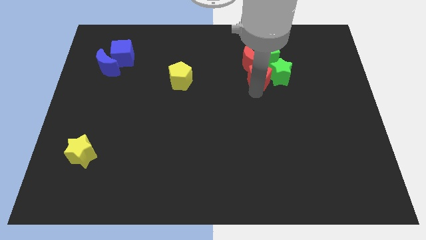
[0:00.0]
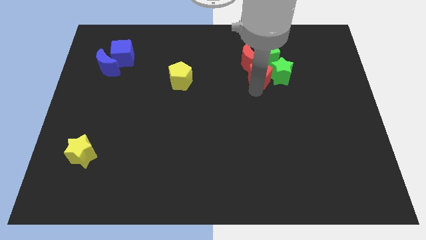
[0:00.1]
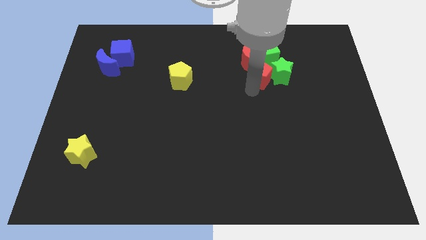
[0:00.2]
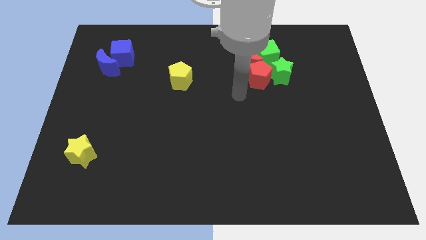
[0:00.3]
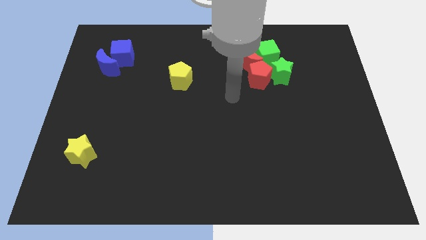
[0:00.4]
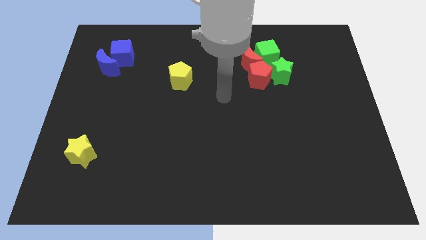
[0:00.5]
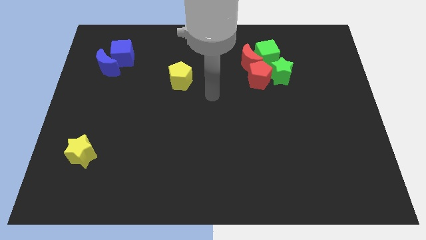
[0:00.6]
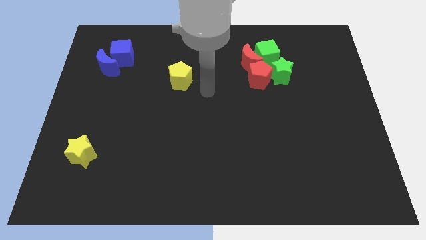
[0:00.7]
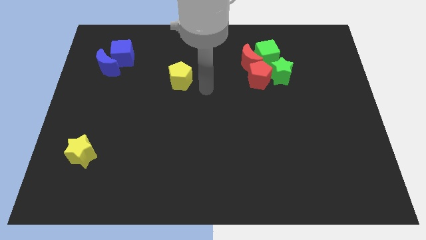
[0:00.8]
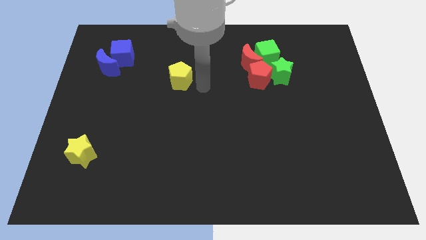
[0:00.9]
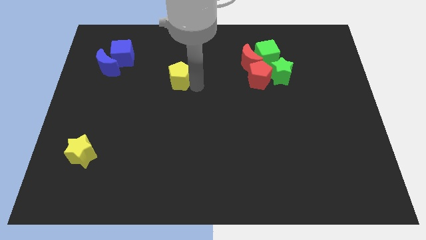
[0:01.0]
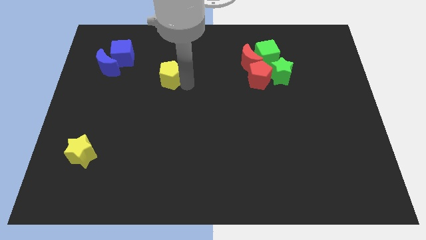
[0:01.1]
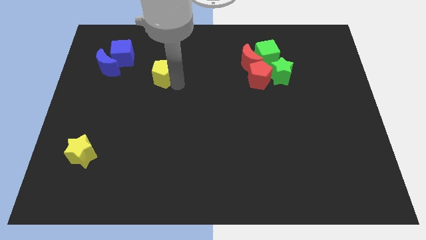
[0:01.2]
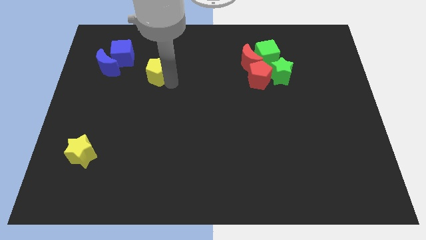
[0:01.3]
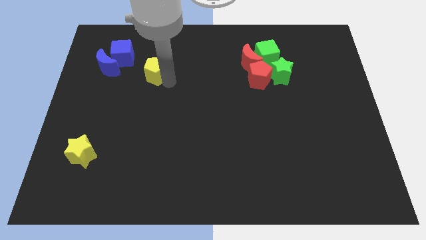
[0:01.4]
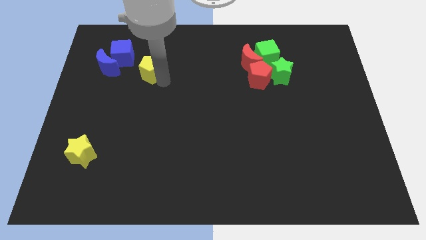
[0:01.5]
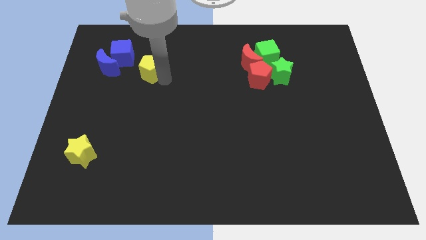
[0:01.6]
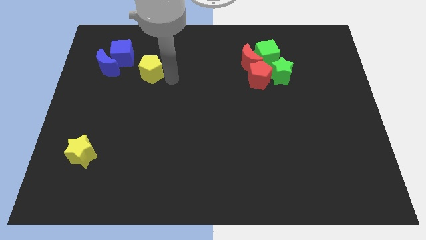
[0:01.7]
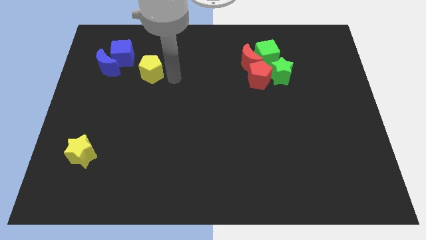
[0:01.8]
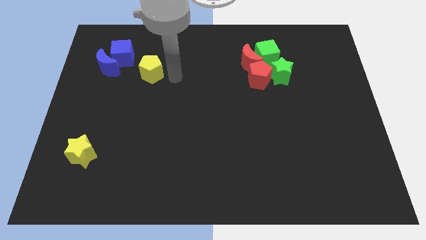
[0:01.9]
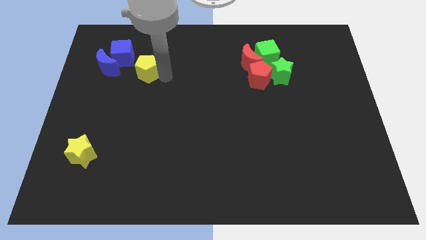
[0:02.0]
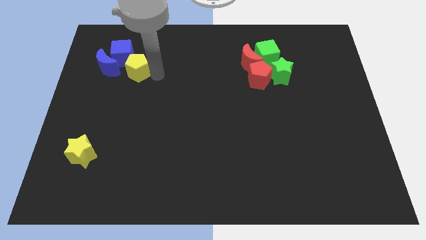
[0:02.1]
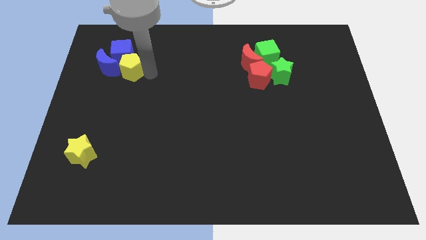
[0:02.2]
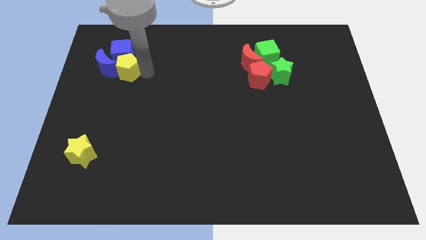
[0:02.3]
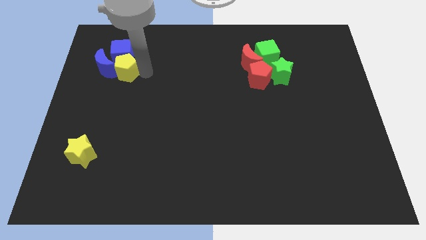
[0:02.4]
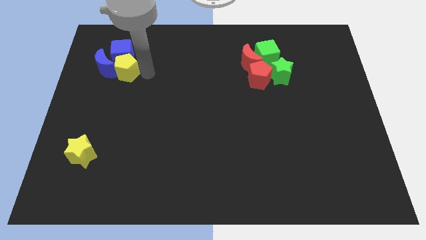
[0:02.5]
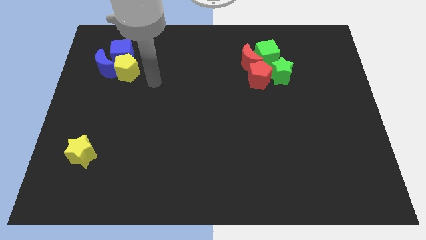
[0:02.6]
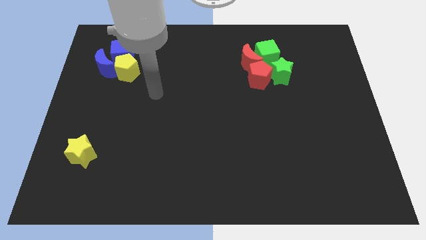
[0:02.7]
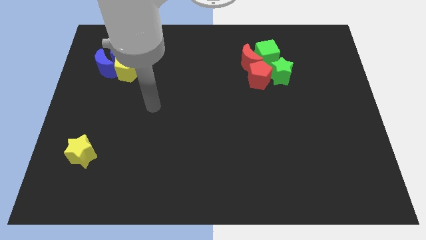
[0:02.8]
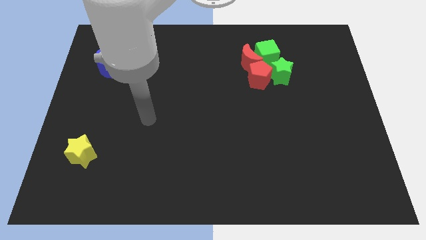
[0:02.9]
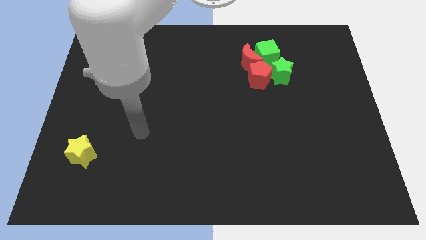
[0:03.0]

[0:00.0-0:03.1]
move yellow pentagon near to the blue cube

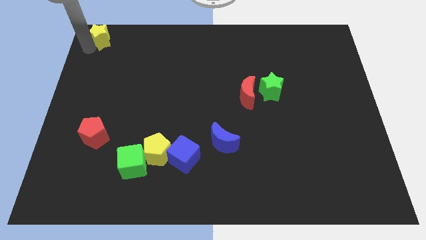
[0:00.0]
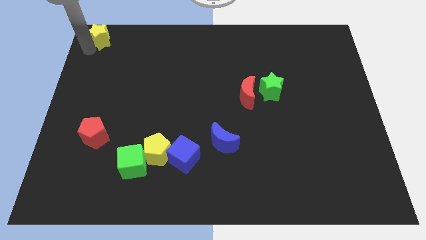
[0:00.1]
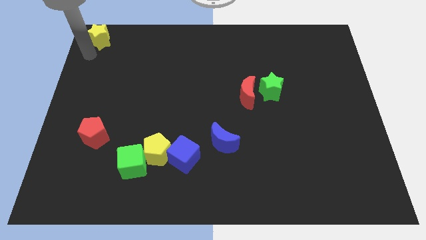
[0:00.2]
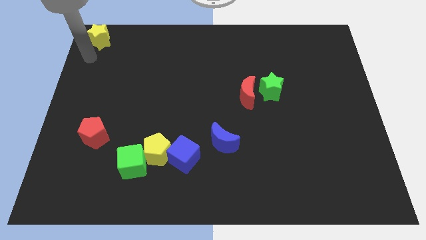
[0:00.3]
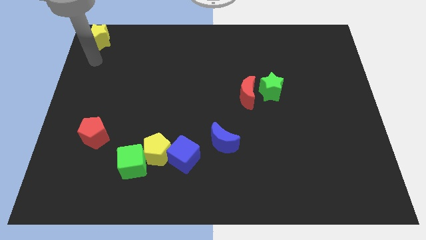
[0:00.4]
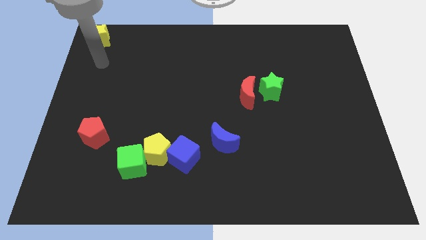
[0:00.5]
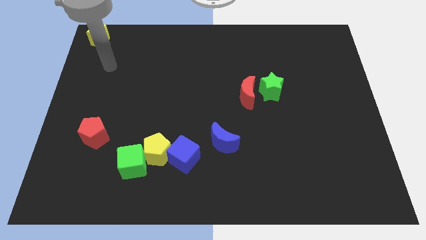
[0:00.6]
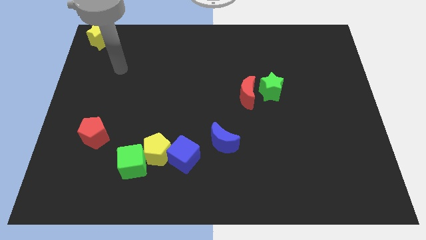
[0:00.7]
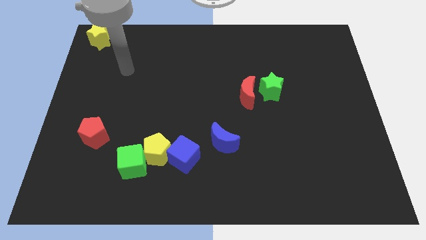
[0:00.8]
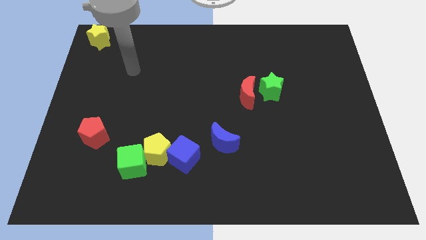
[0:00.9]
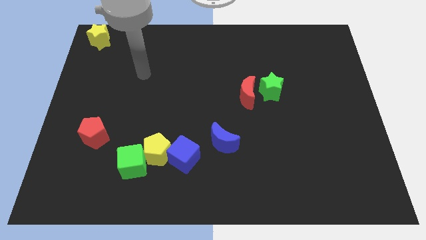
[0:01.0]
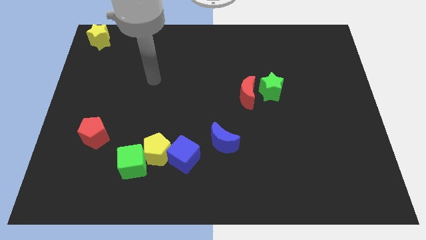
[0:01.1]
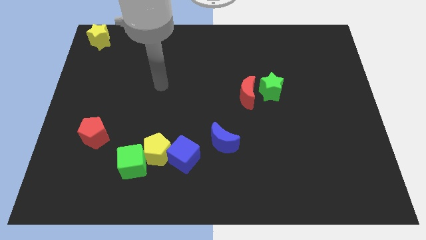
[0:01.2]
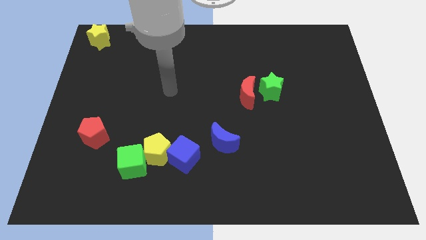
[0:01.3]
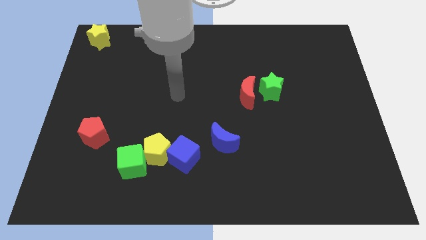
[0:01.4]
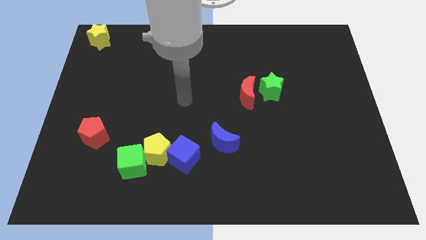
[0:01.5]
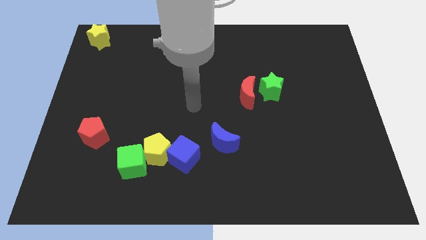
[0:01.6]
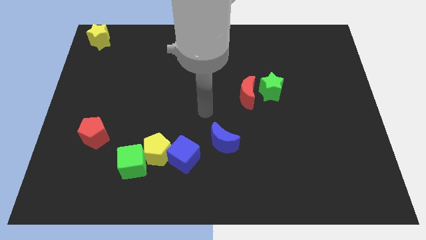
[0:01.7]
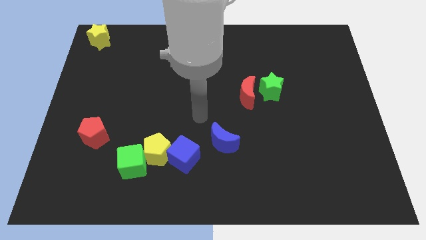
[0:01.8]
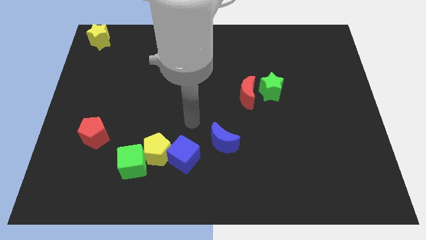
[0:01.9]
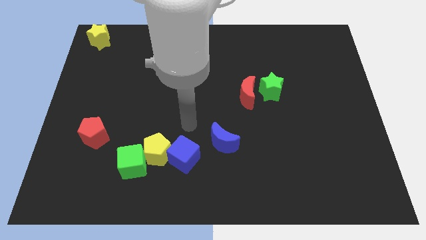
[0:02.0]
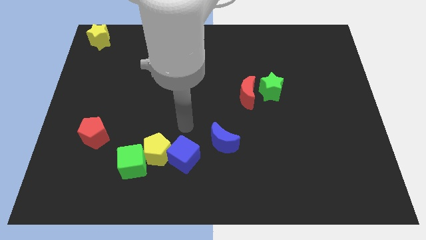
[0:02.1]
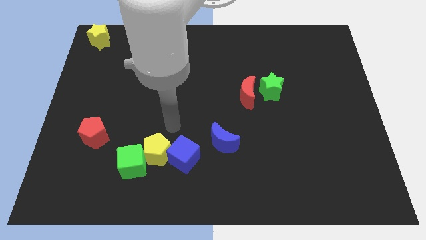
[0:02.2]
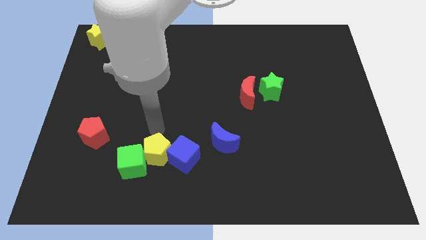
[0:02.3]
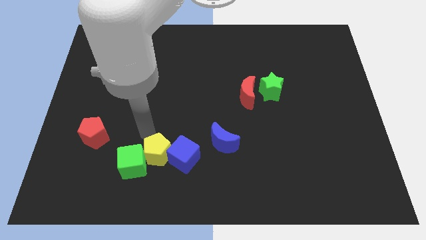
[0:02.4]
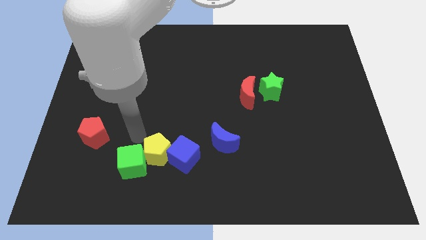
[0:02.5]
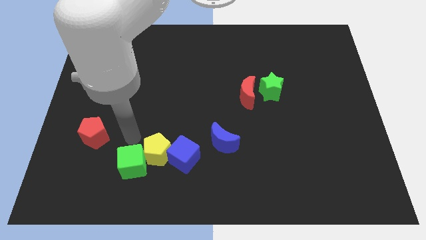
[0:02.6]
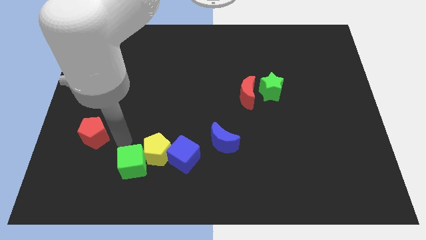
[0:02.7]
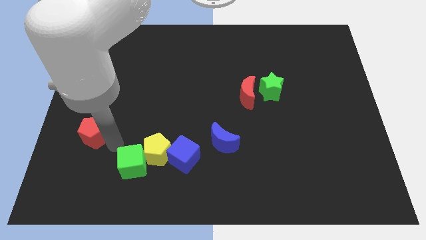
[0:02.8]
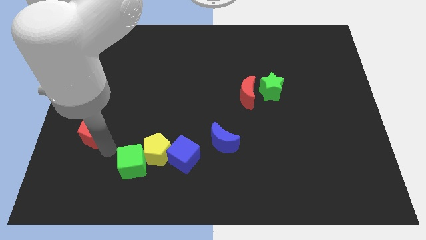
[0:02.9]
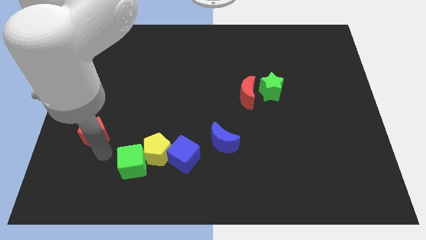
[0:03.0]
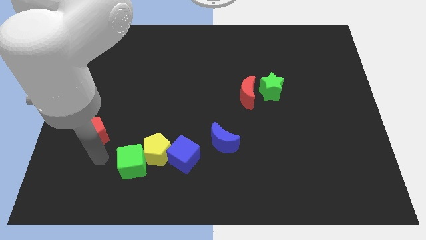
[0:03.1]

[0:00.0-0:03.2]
move your arm left to green cube

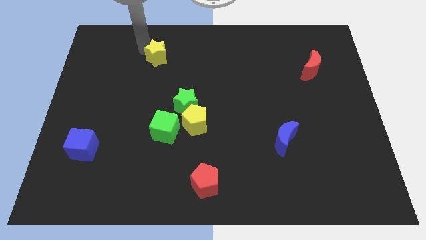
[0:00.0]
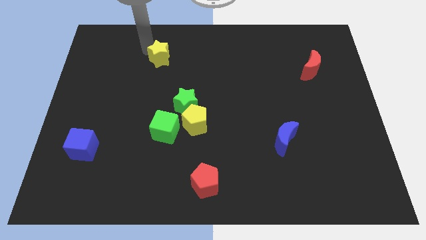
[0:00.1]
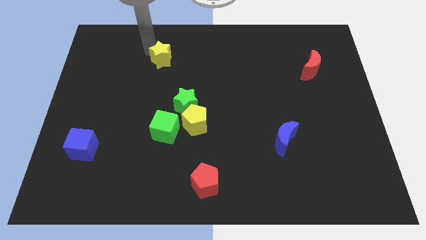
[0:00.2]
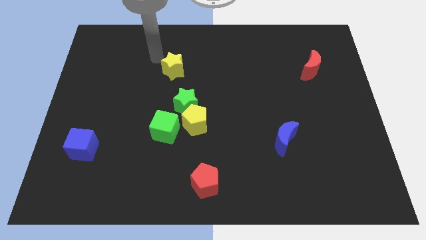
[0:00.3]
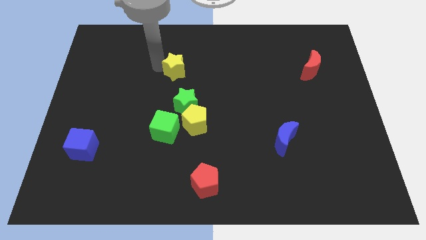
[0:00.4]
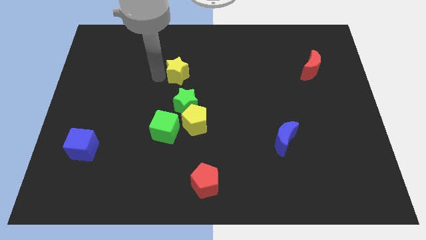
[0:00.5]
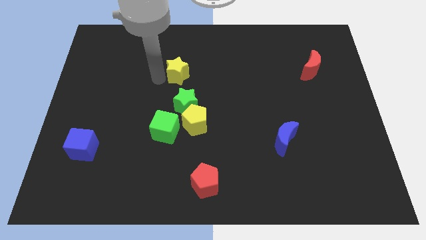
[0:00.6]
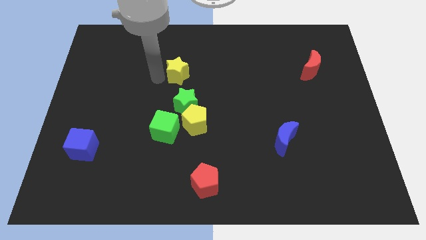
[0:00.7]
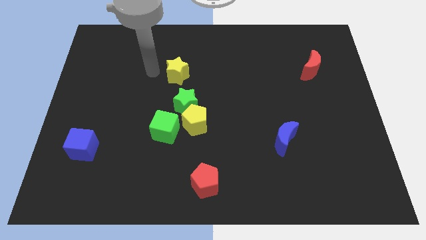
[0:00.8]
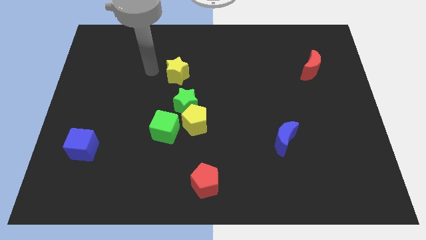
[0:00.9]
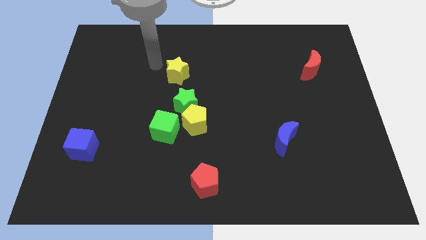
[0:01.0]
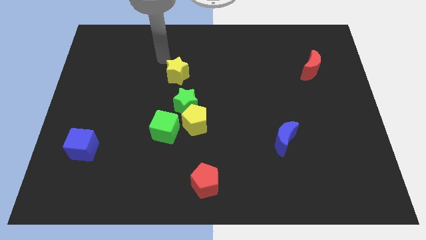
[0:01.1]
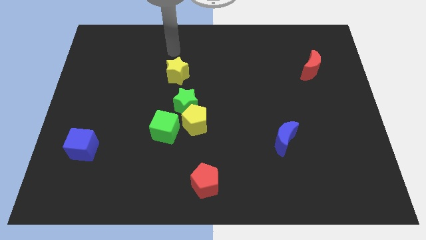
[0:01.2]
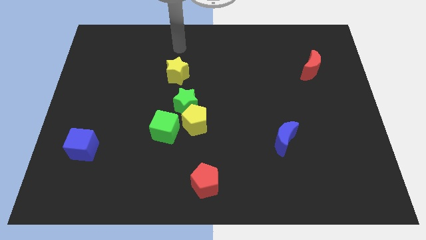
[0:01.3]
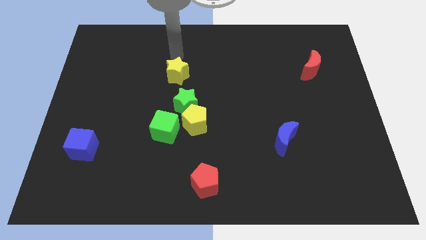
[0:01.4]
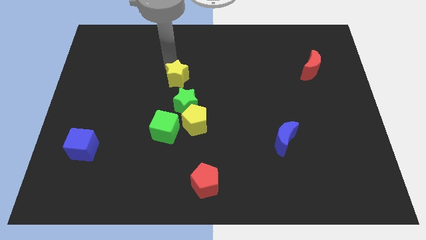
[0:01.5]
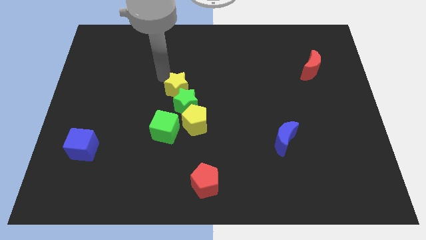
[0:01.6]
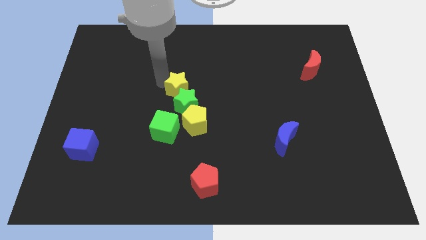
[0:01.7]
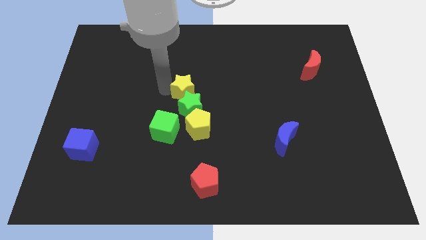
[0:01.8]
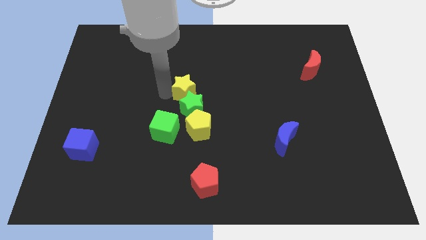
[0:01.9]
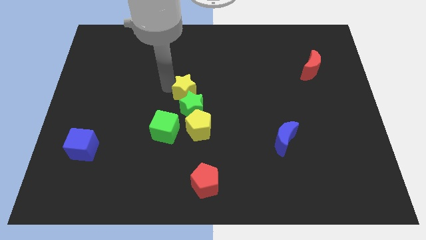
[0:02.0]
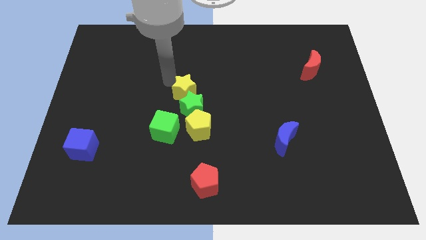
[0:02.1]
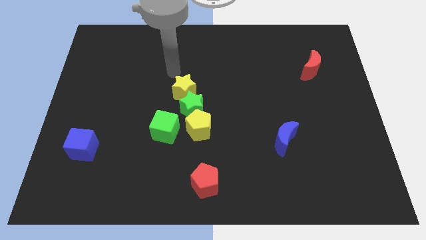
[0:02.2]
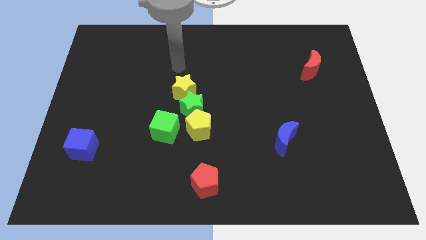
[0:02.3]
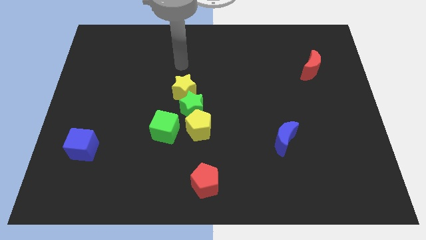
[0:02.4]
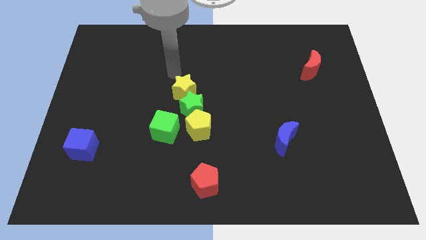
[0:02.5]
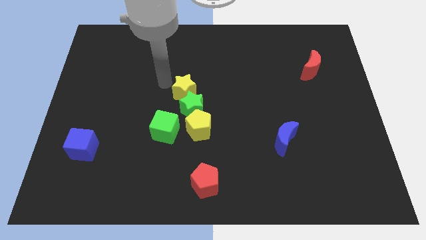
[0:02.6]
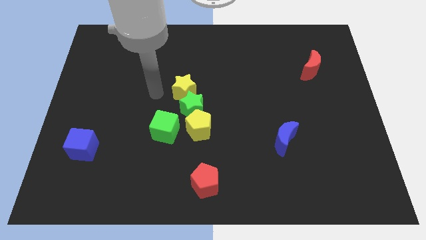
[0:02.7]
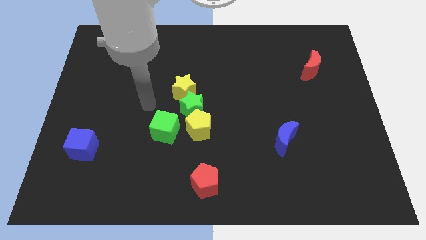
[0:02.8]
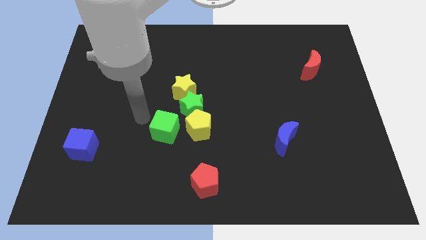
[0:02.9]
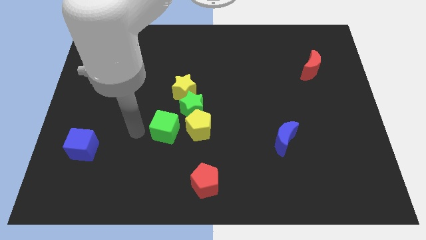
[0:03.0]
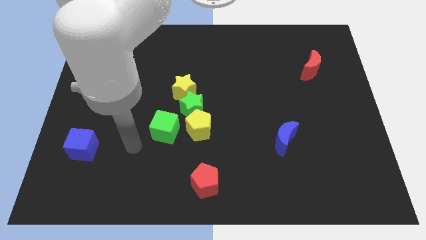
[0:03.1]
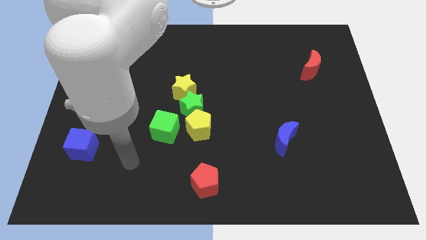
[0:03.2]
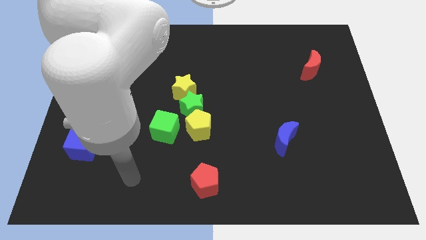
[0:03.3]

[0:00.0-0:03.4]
place the yellow star above the green star
